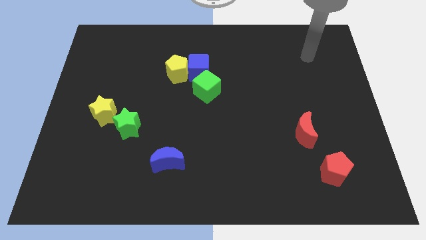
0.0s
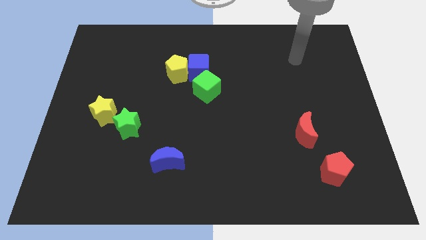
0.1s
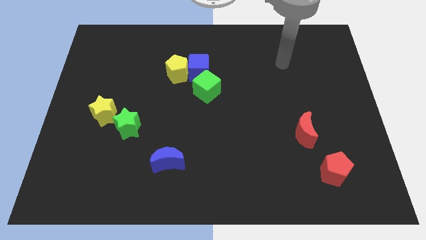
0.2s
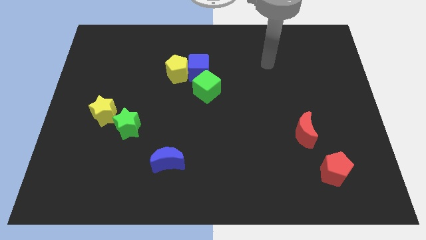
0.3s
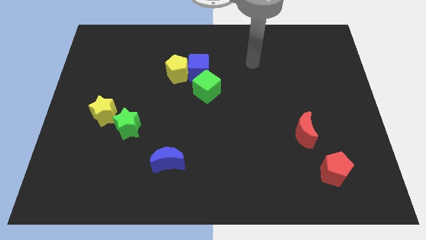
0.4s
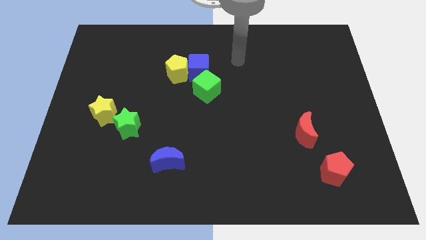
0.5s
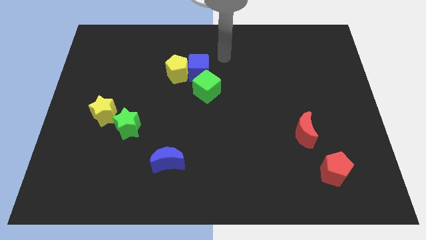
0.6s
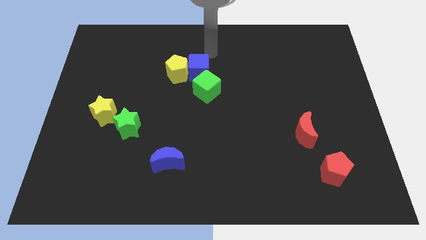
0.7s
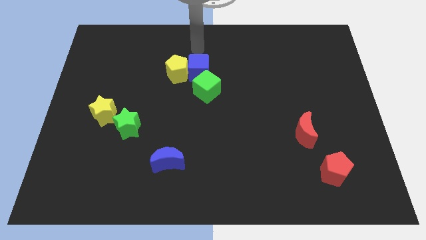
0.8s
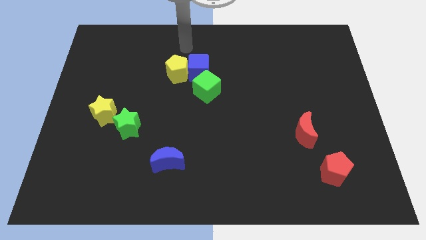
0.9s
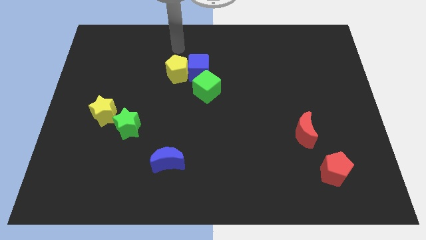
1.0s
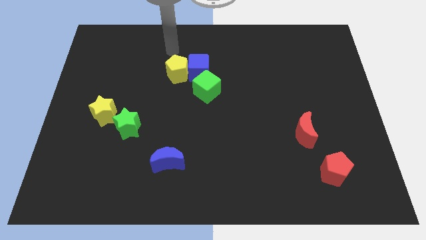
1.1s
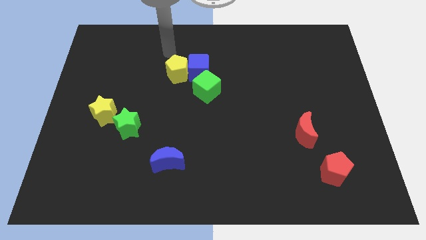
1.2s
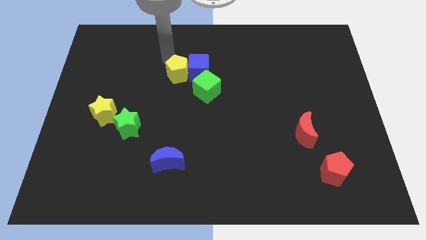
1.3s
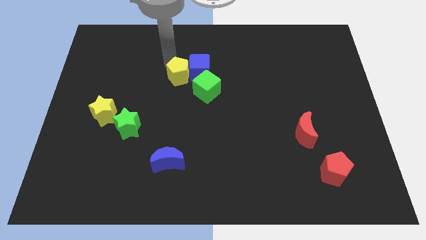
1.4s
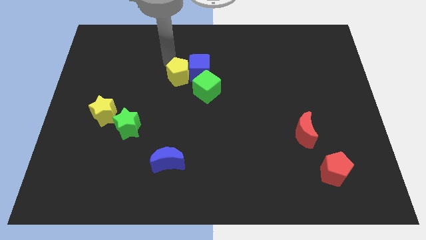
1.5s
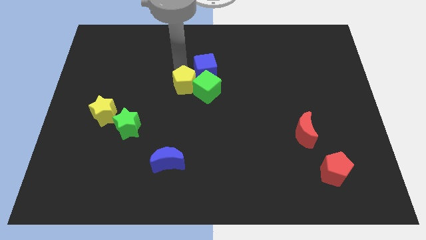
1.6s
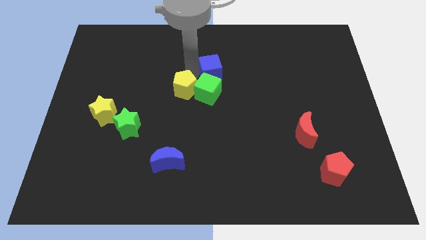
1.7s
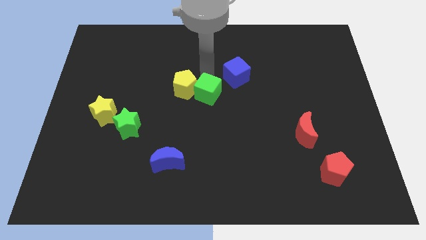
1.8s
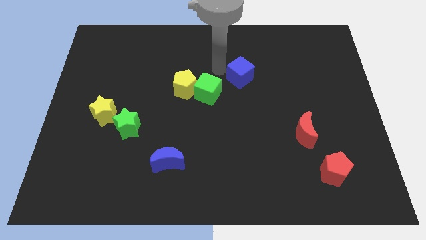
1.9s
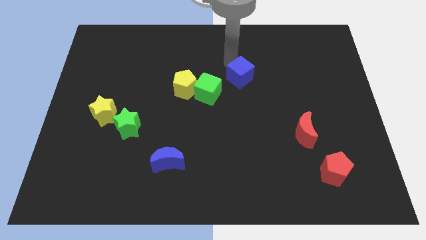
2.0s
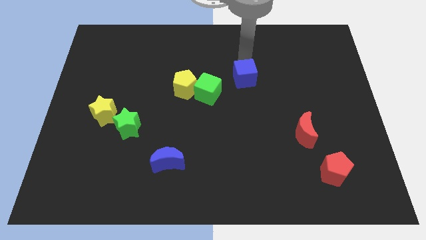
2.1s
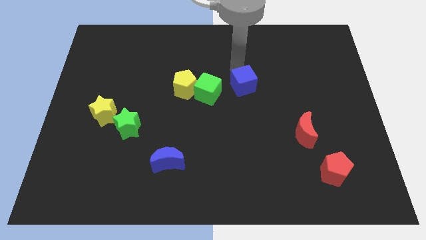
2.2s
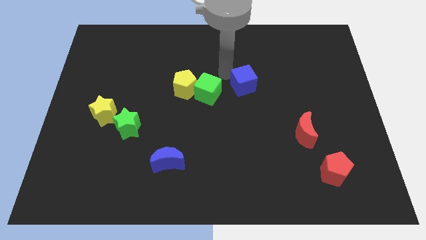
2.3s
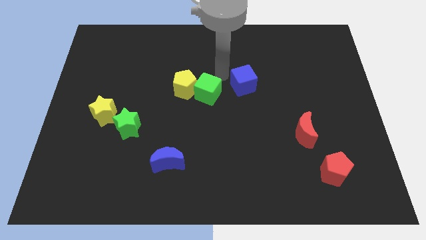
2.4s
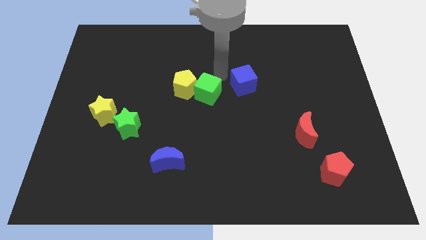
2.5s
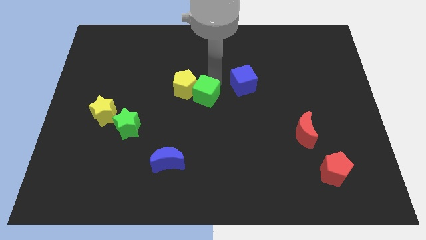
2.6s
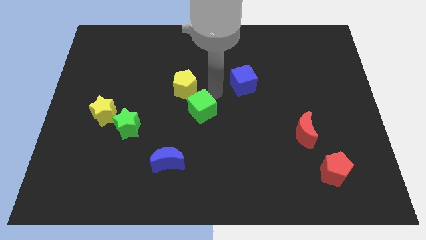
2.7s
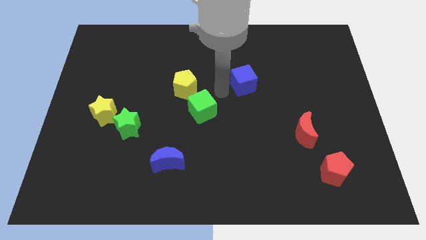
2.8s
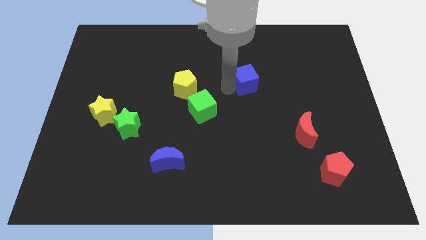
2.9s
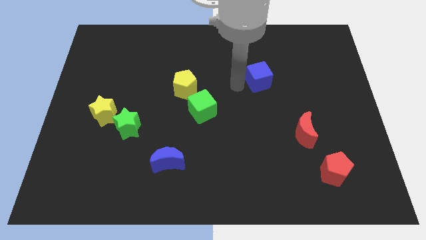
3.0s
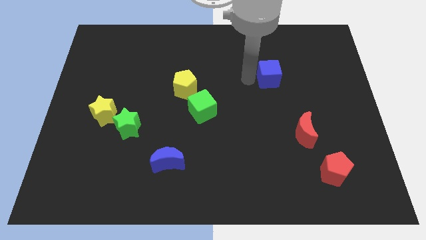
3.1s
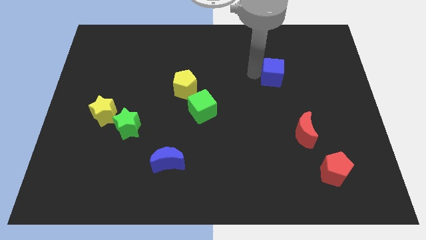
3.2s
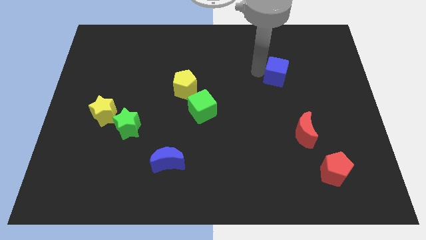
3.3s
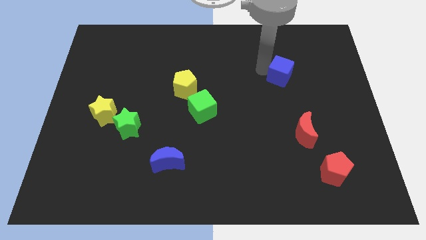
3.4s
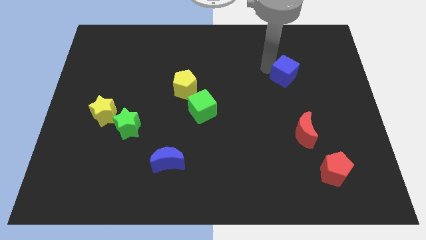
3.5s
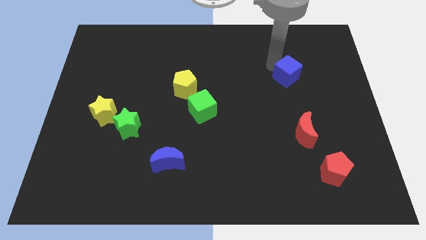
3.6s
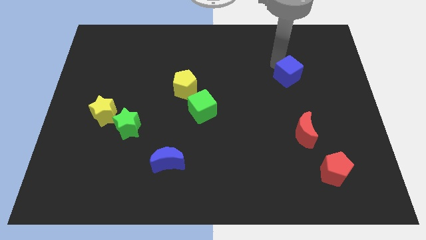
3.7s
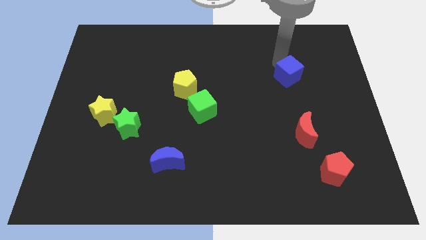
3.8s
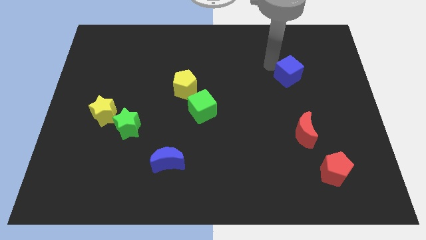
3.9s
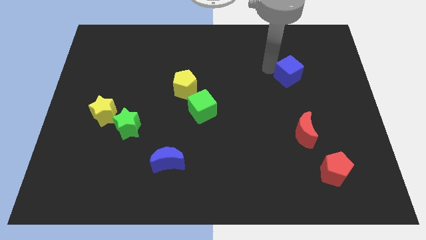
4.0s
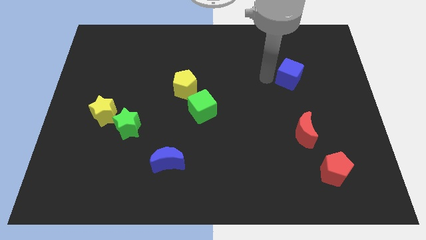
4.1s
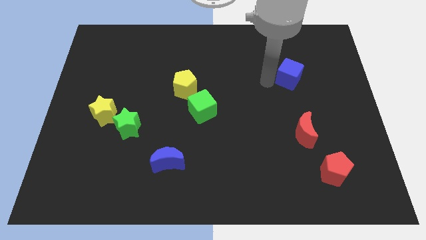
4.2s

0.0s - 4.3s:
separate the blue cube from the yellow pentagon and the green cube

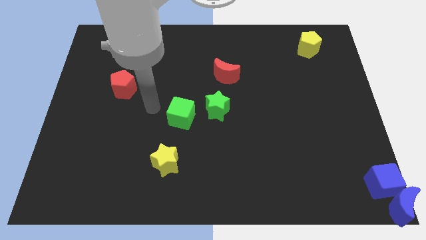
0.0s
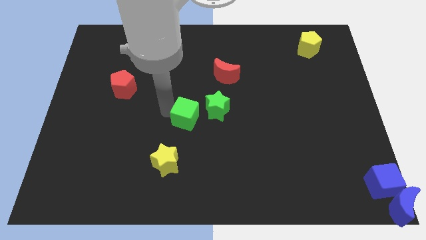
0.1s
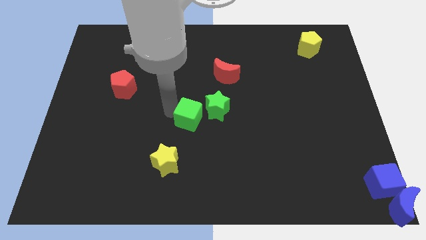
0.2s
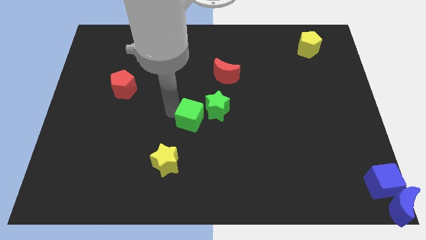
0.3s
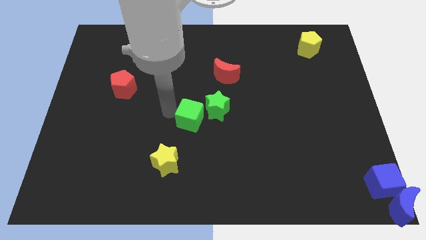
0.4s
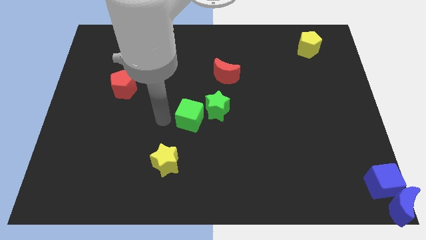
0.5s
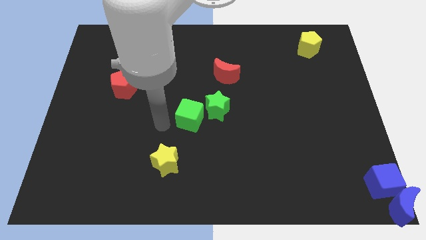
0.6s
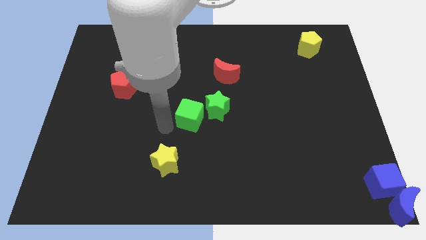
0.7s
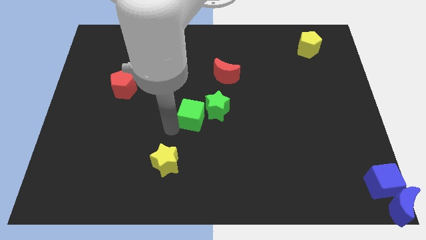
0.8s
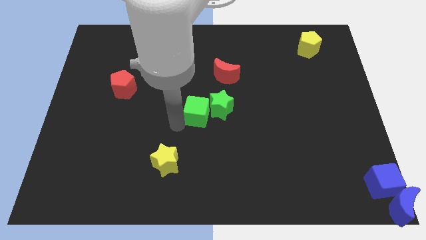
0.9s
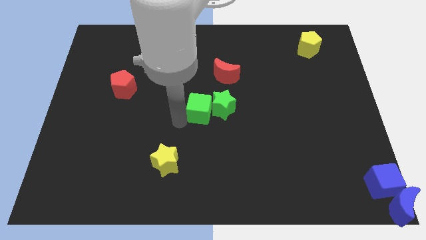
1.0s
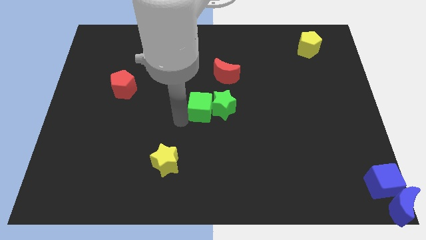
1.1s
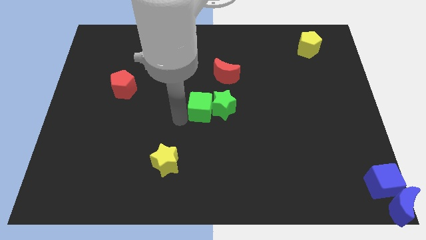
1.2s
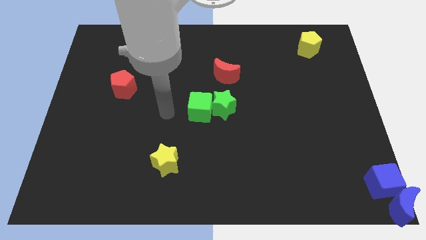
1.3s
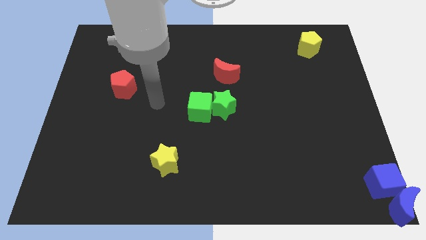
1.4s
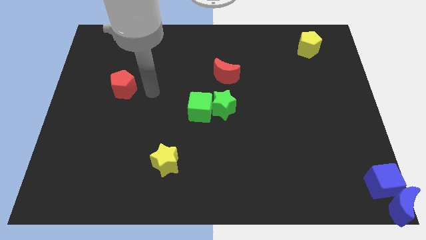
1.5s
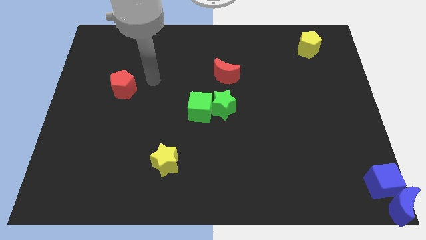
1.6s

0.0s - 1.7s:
push the green cube to the left of the green star

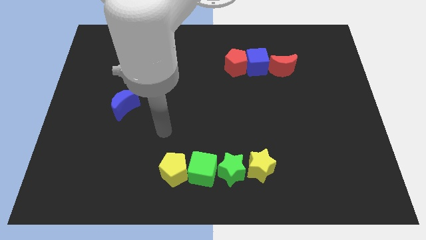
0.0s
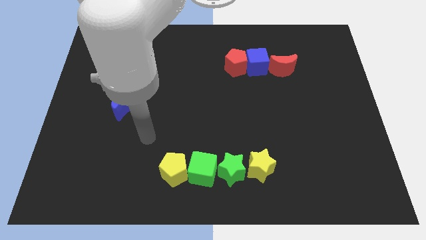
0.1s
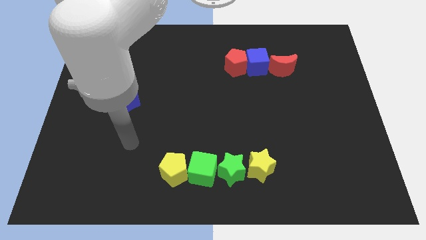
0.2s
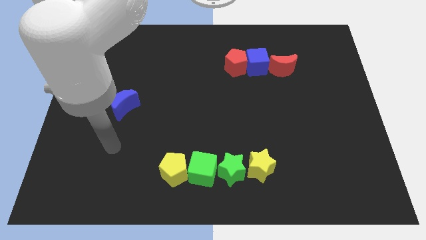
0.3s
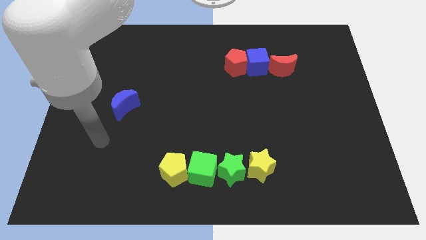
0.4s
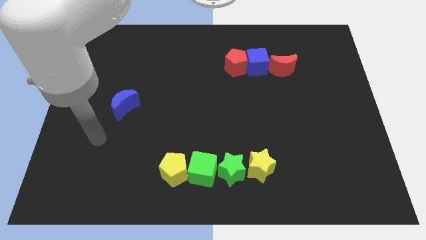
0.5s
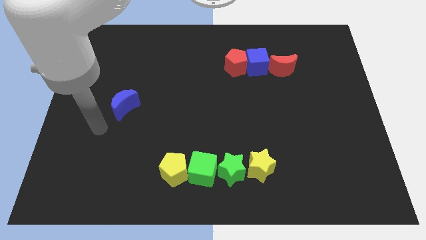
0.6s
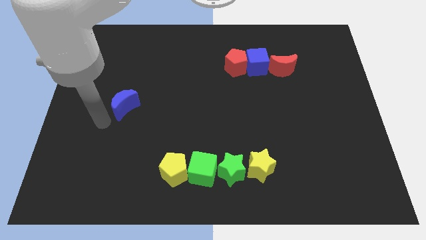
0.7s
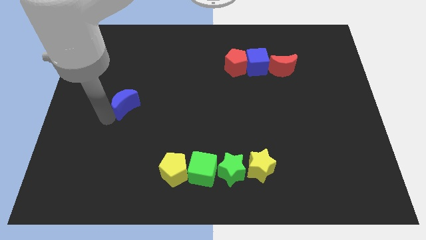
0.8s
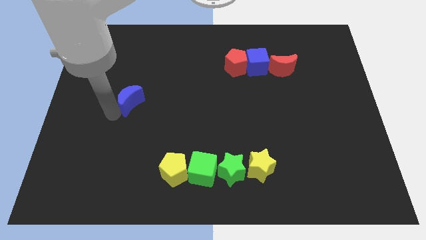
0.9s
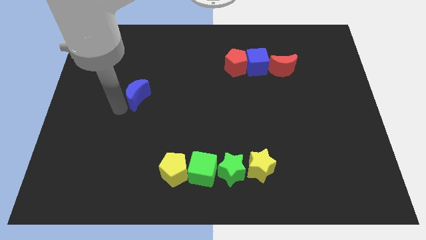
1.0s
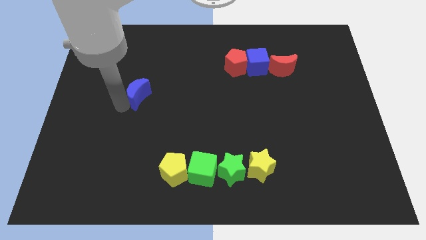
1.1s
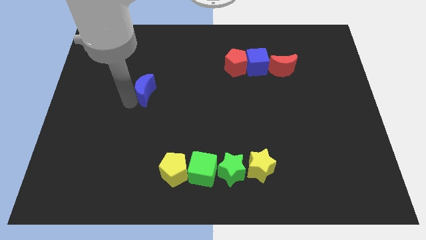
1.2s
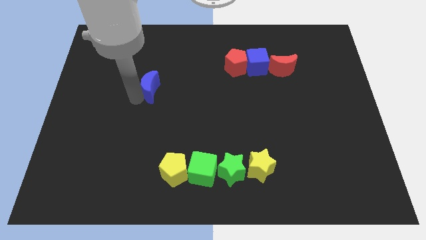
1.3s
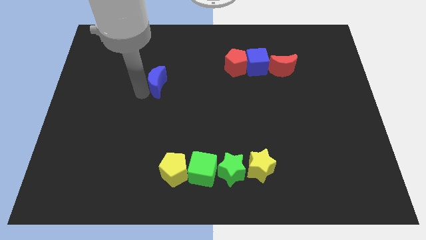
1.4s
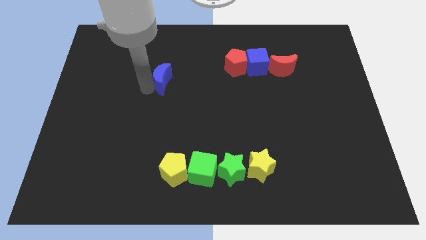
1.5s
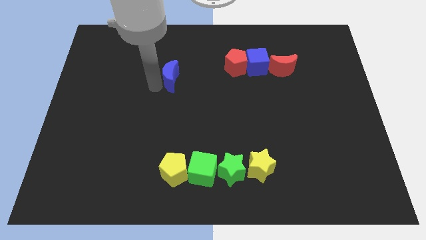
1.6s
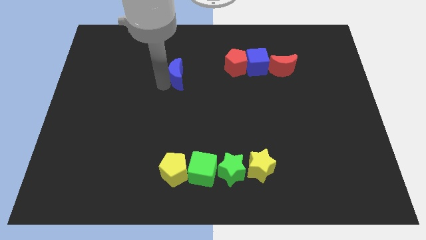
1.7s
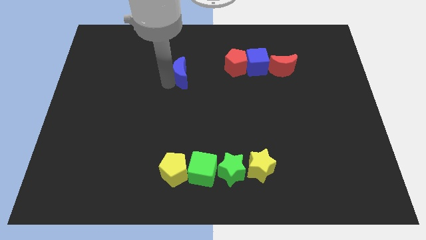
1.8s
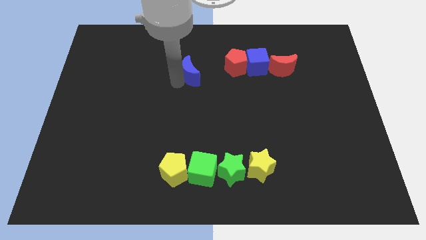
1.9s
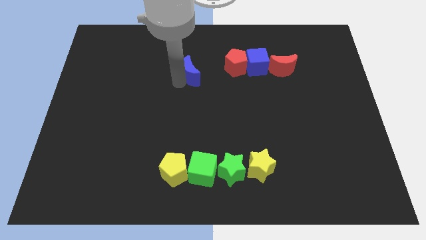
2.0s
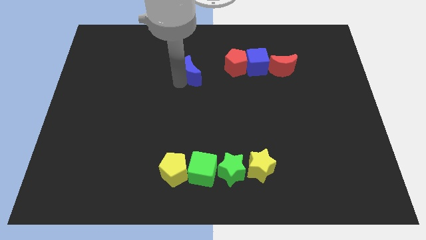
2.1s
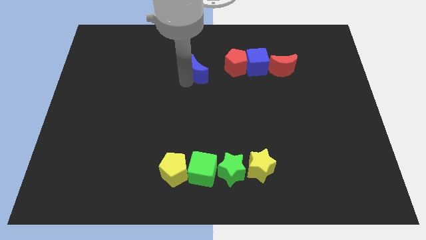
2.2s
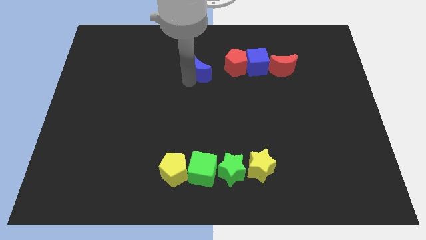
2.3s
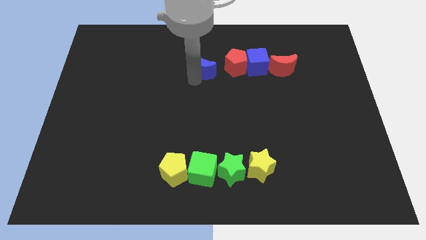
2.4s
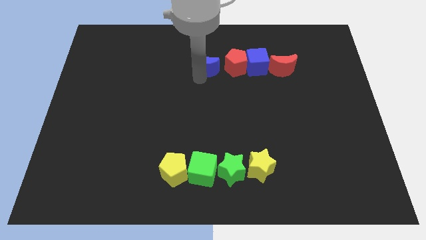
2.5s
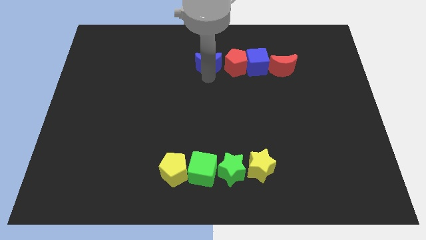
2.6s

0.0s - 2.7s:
push the blue moon upward

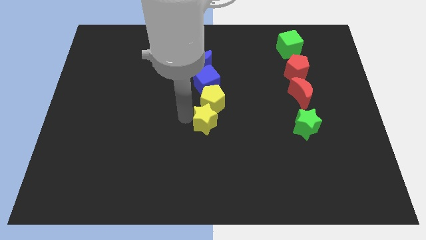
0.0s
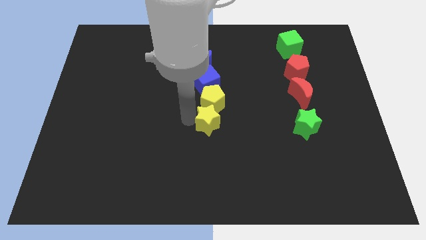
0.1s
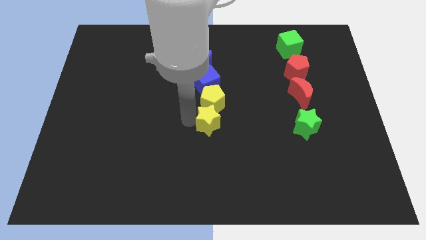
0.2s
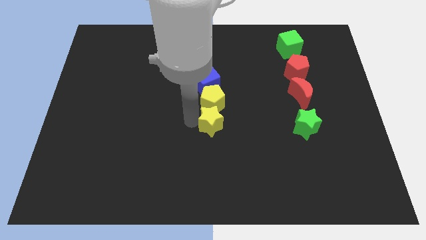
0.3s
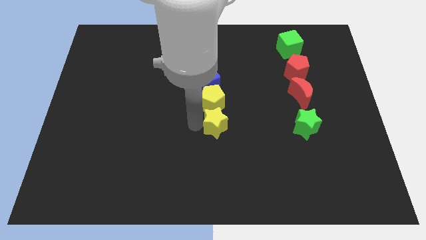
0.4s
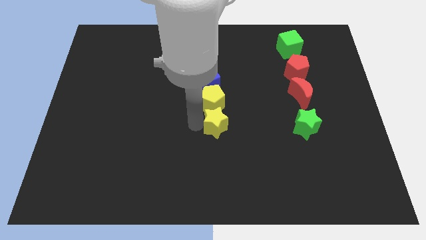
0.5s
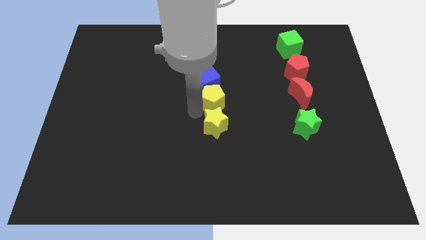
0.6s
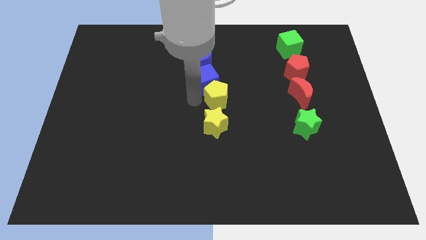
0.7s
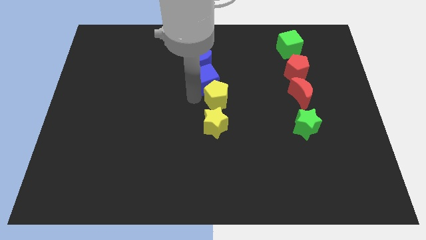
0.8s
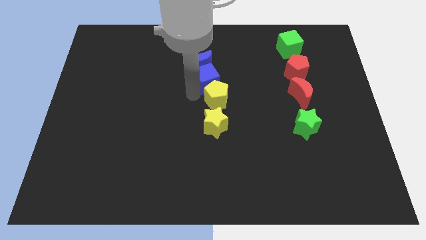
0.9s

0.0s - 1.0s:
adjust the yellow blocks
